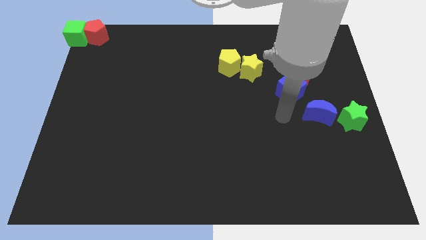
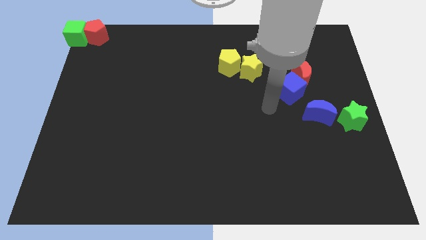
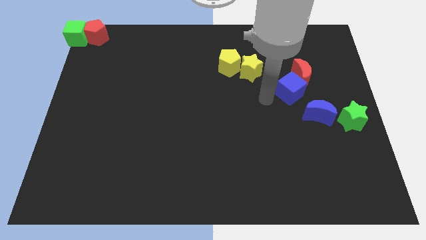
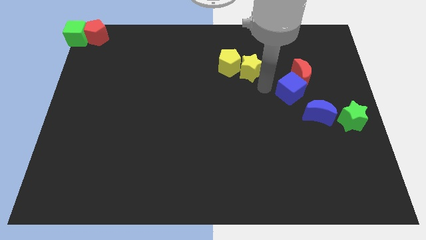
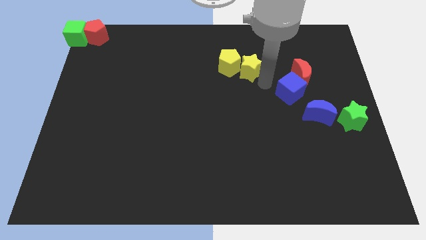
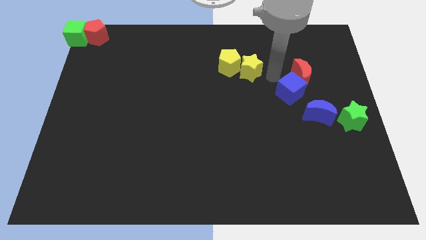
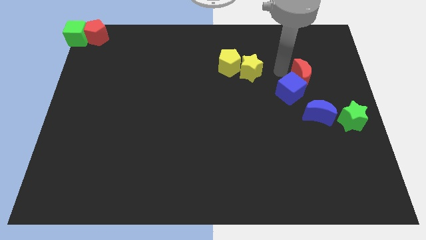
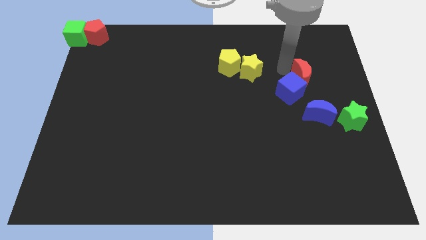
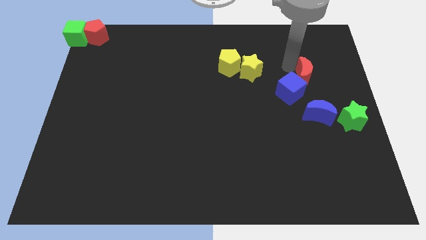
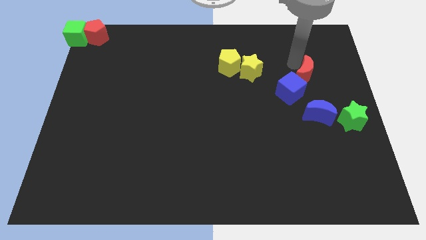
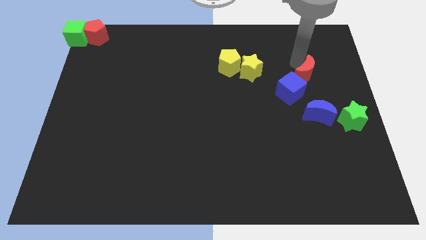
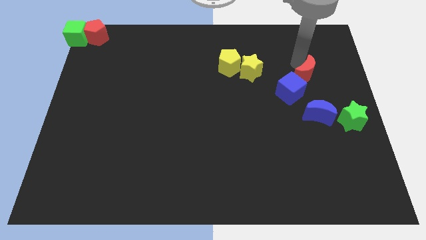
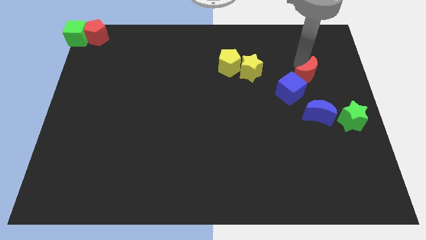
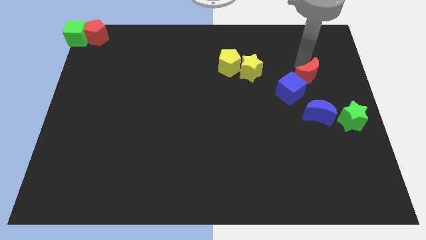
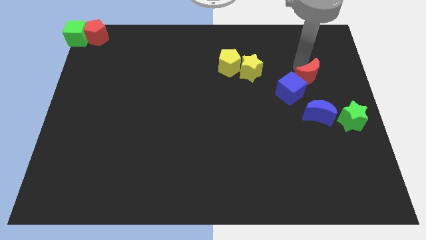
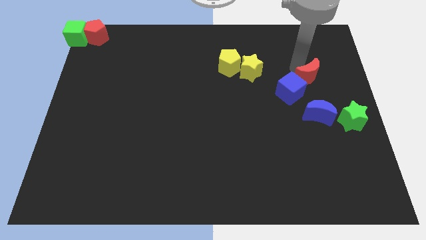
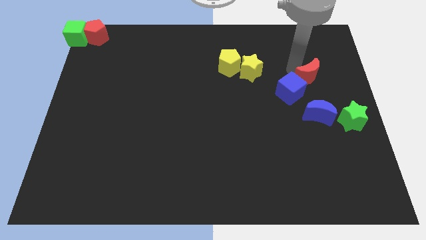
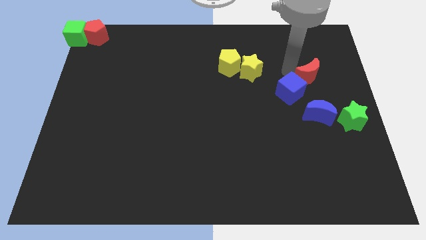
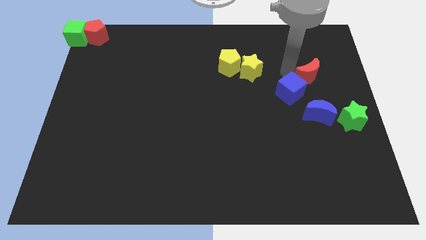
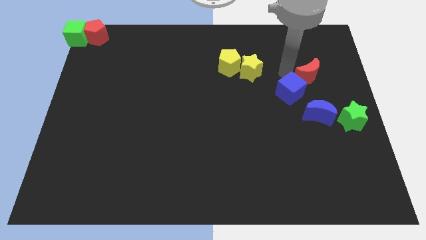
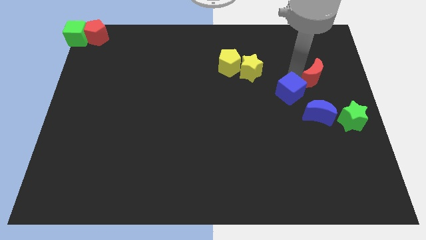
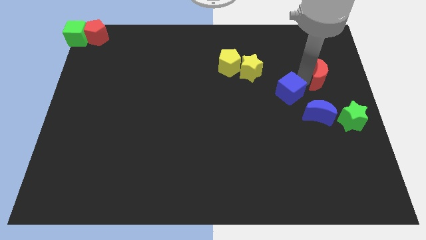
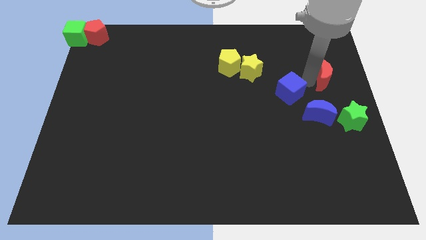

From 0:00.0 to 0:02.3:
move the red moon vertically to the top of the blue crescent

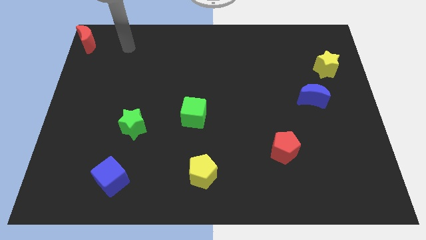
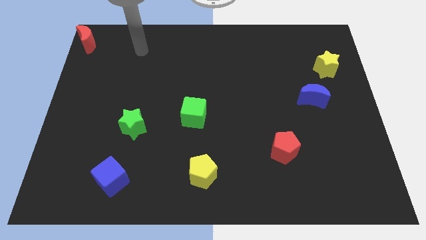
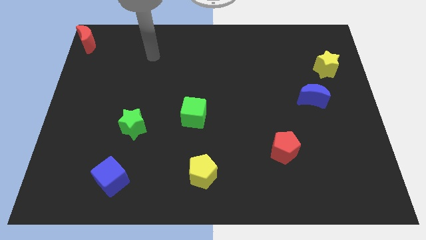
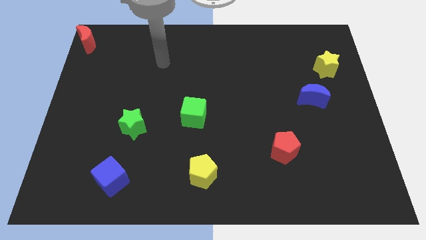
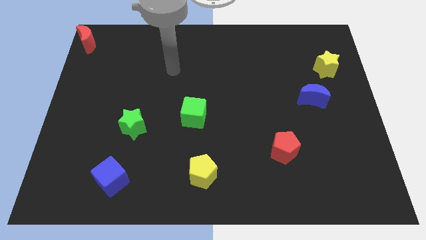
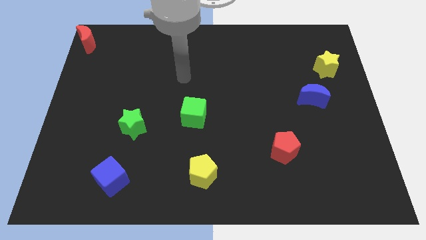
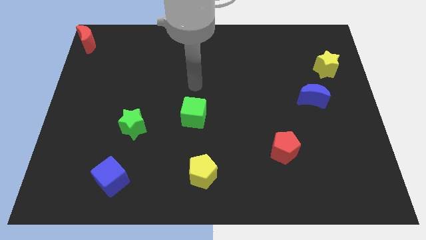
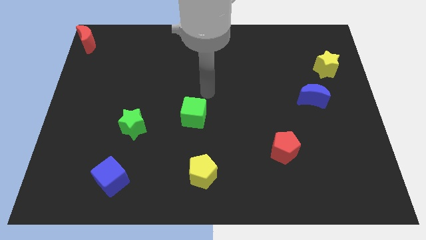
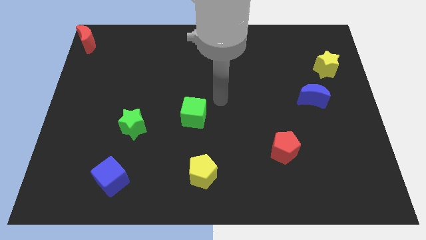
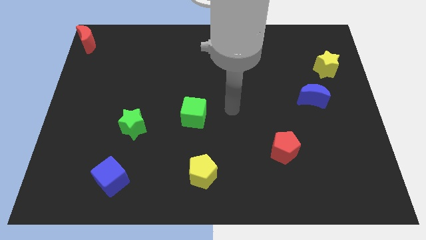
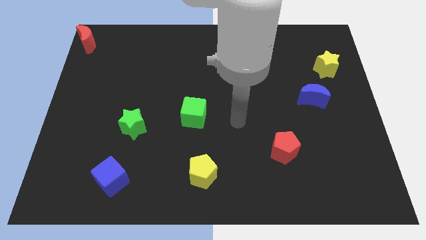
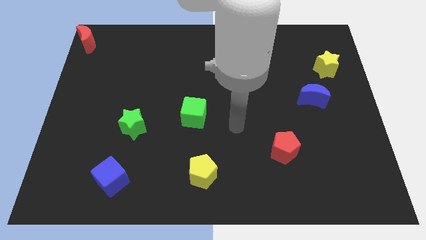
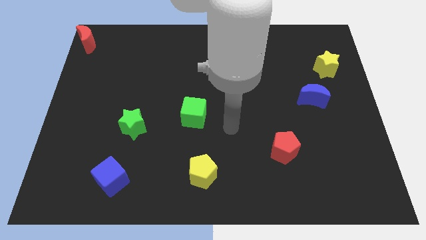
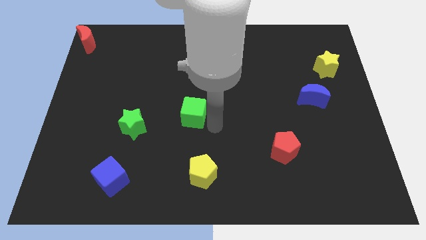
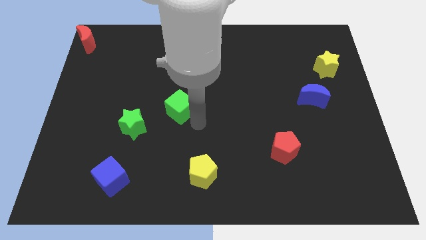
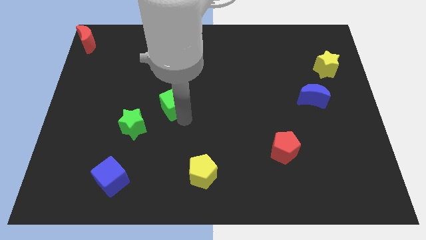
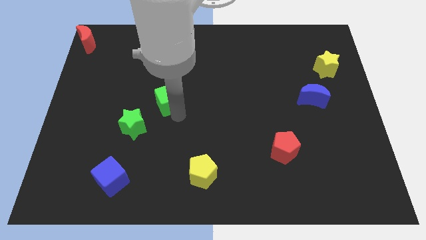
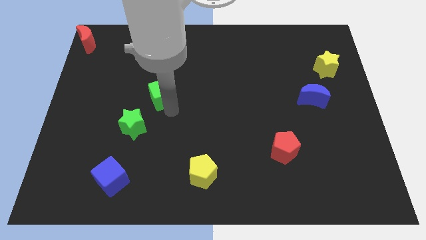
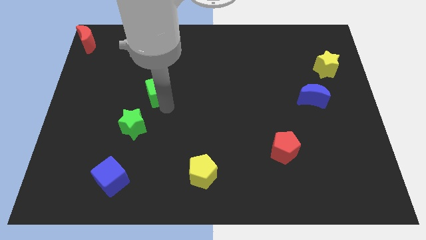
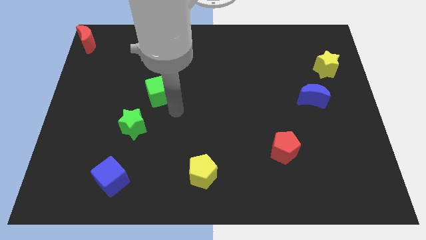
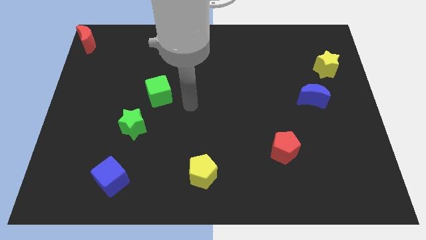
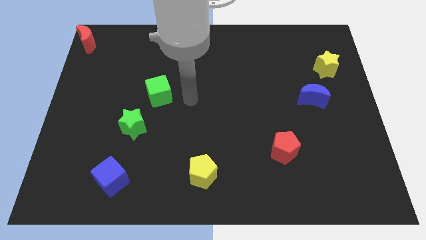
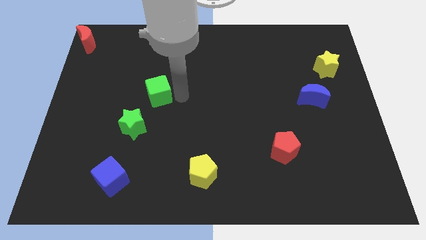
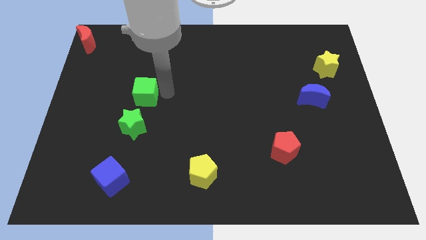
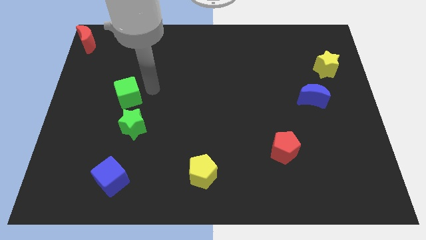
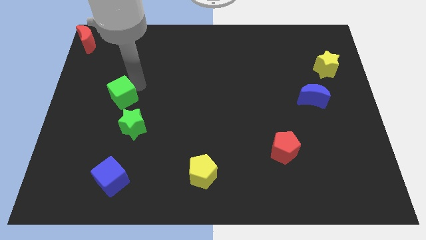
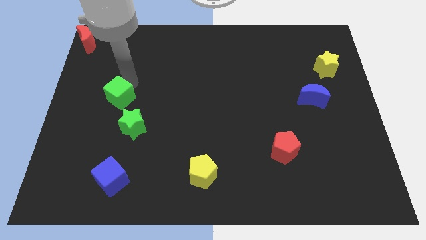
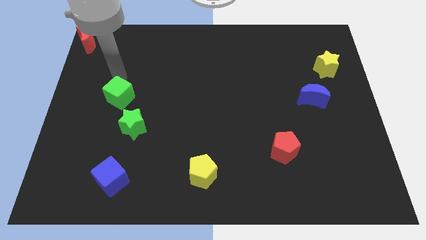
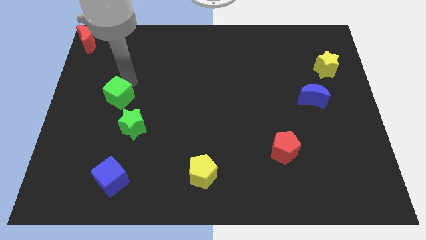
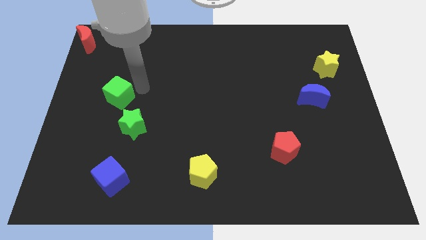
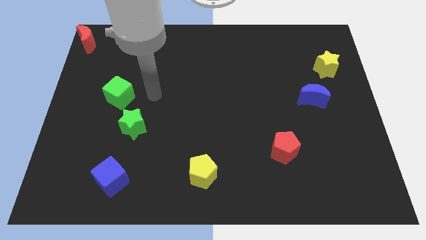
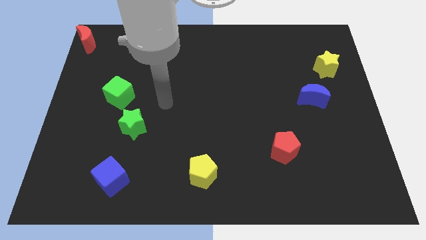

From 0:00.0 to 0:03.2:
push the green cube diagonal to top of the green star

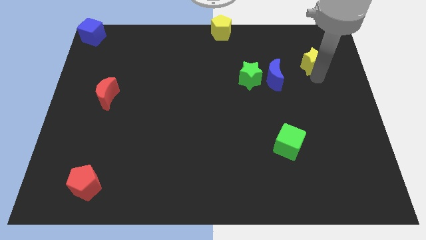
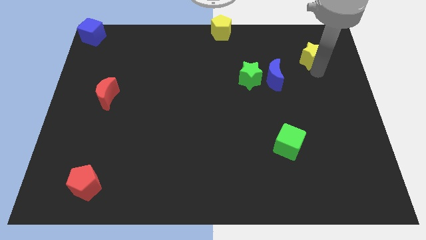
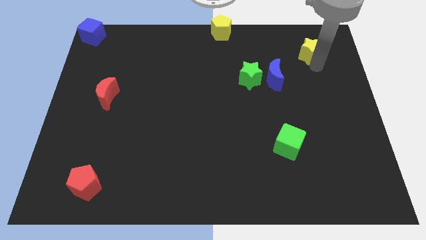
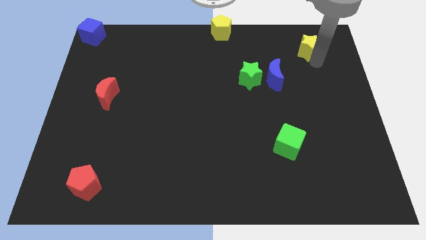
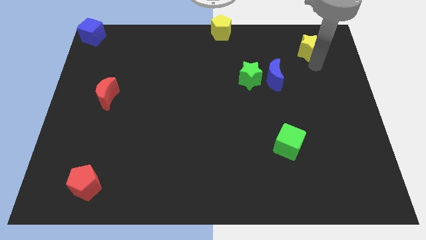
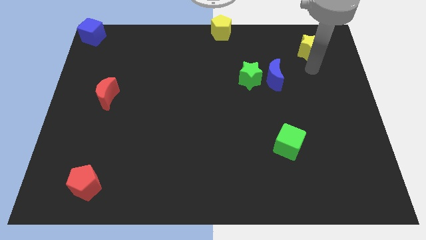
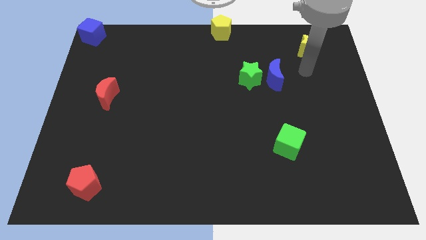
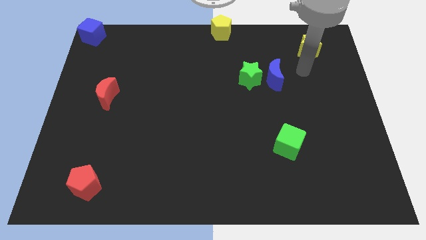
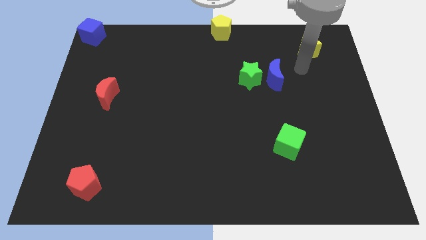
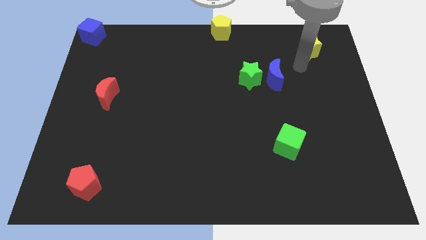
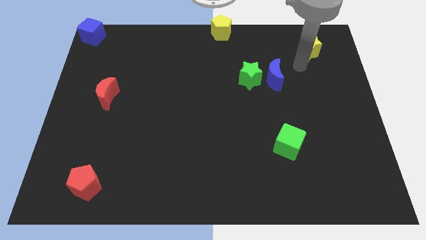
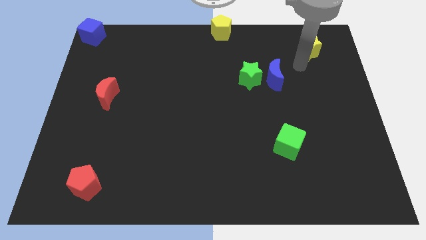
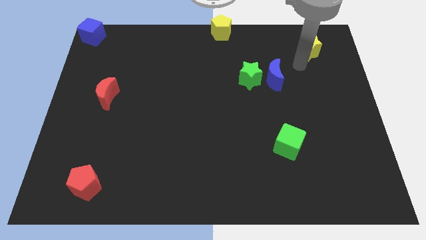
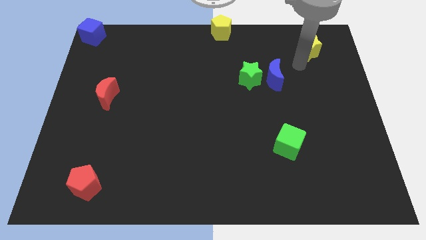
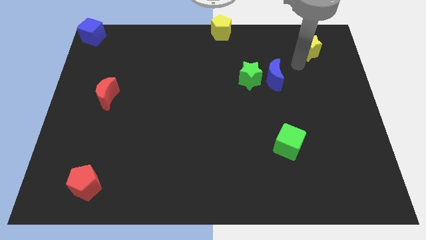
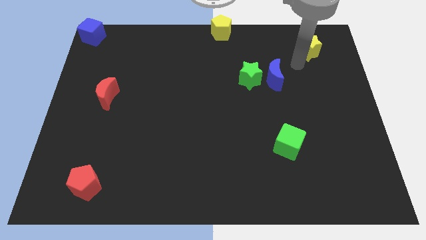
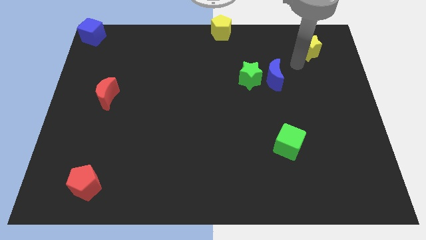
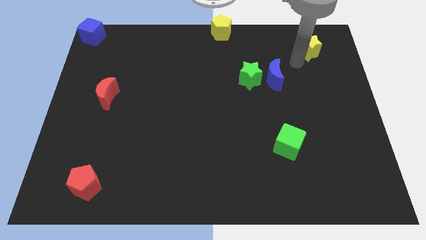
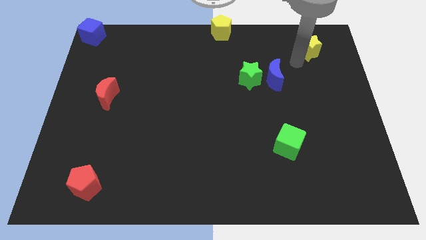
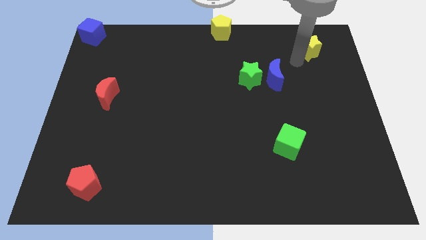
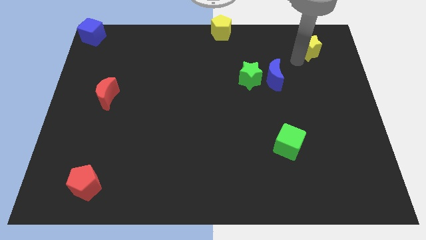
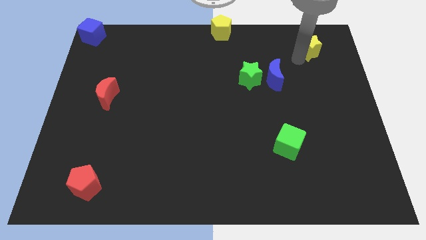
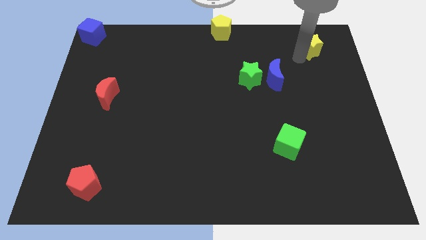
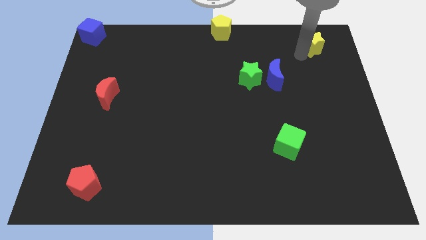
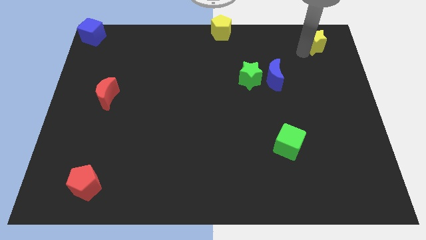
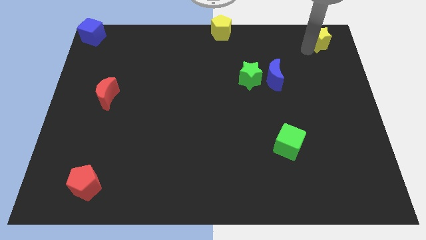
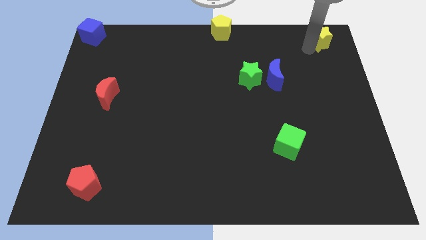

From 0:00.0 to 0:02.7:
push yellow star towards top right corner of the board

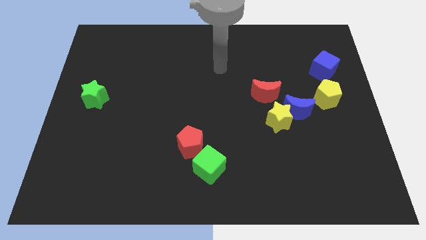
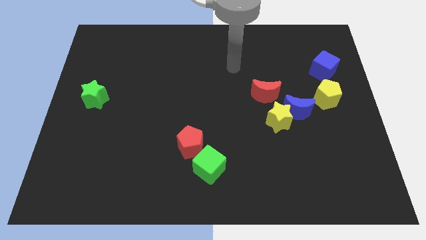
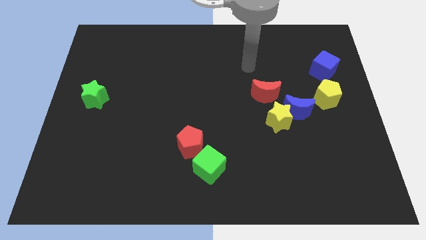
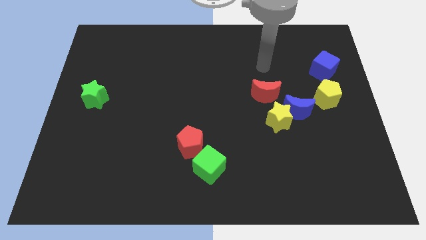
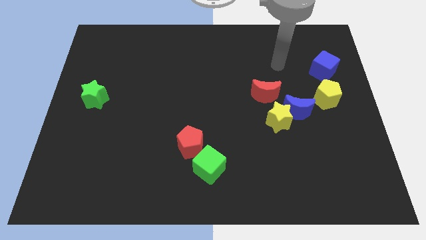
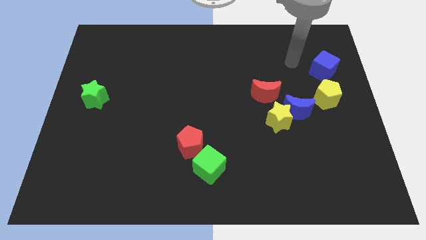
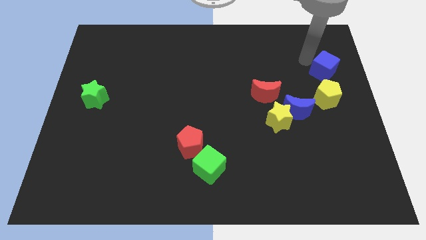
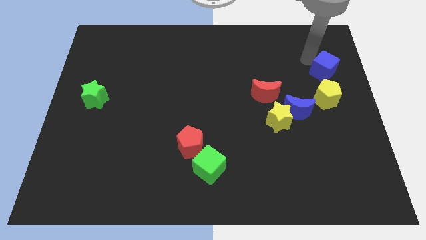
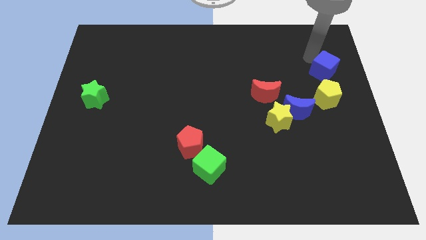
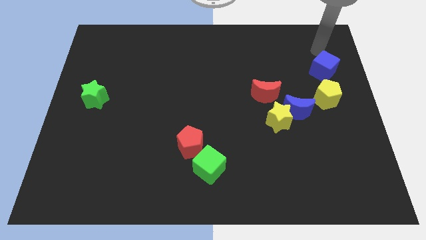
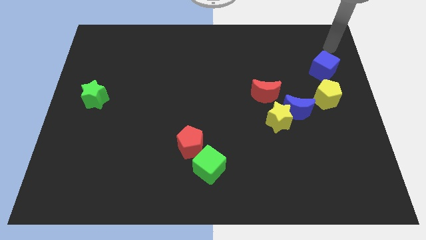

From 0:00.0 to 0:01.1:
move your arm to the top of blue cube
